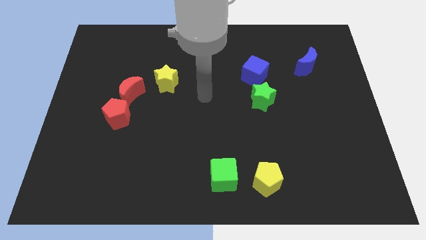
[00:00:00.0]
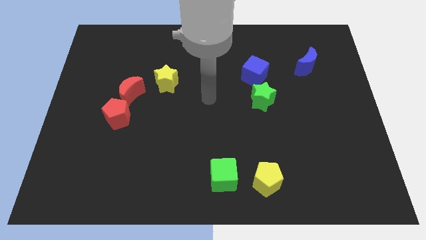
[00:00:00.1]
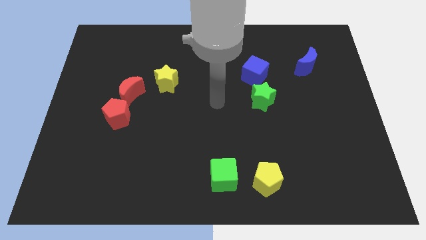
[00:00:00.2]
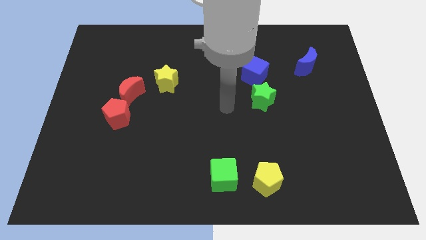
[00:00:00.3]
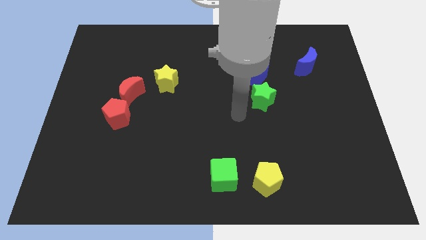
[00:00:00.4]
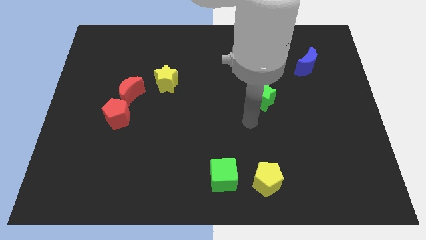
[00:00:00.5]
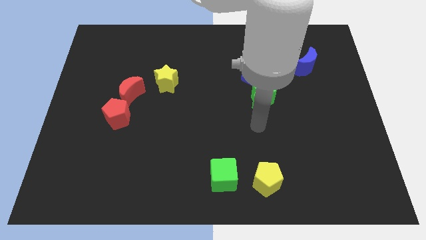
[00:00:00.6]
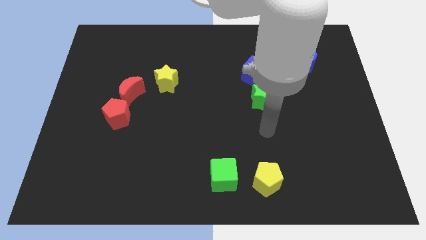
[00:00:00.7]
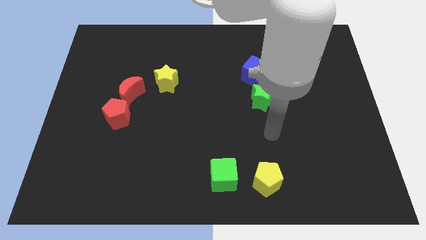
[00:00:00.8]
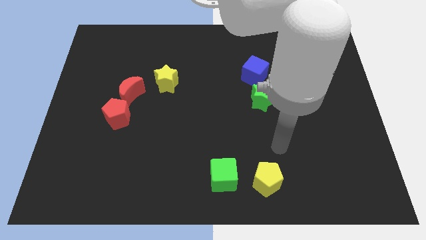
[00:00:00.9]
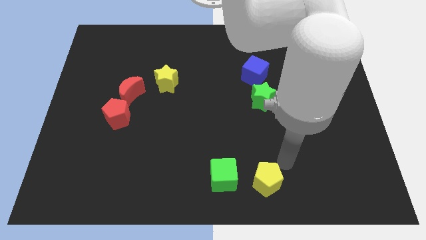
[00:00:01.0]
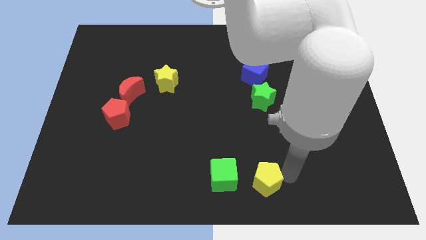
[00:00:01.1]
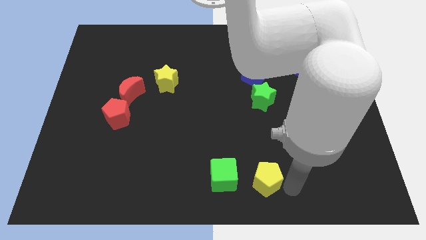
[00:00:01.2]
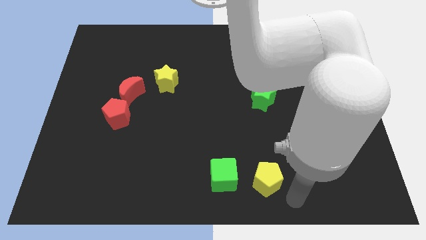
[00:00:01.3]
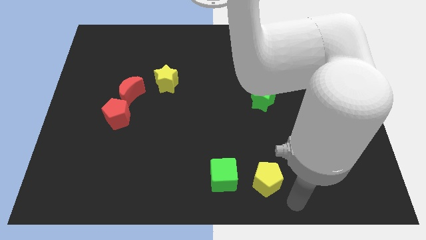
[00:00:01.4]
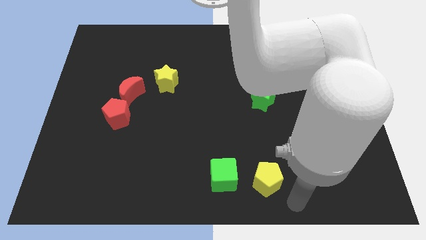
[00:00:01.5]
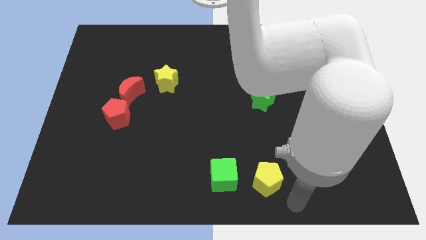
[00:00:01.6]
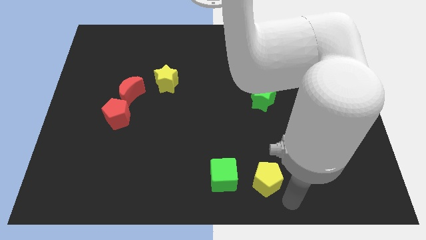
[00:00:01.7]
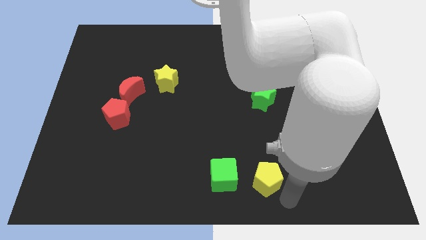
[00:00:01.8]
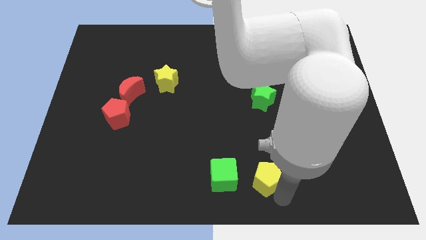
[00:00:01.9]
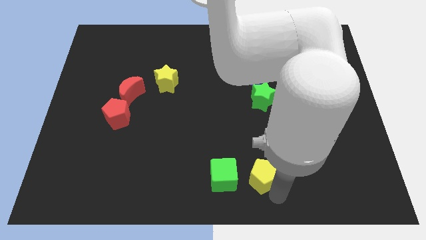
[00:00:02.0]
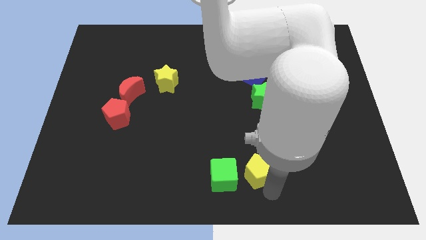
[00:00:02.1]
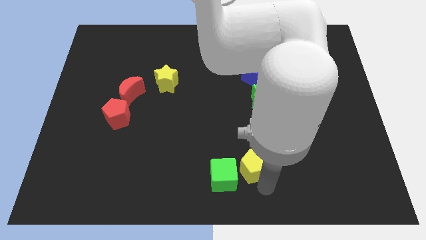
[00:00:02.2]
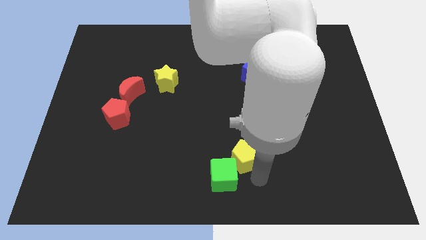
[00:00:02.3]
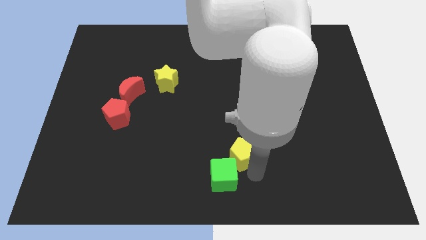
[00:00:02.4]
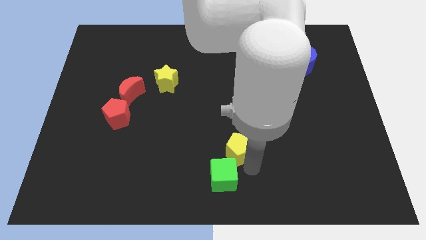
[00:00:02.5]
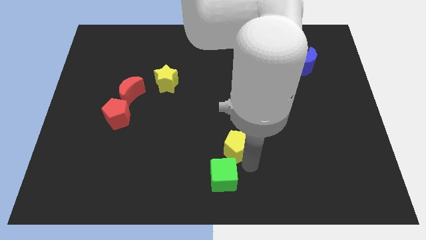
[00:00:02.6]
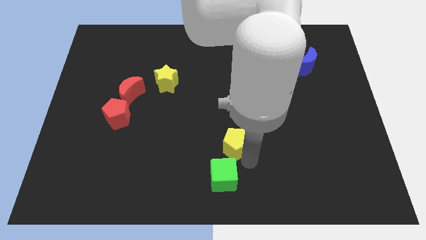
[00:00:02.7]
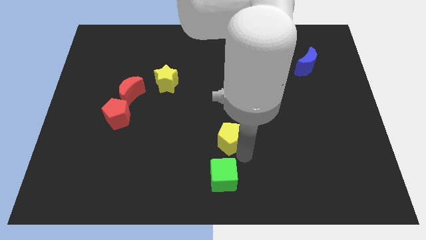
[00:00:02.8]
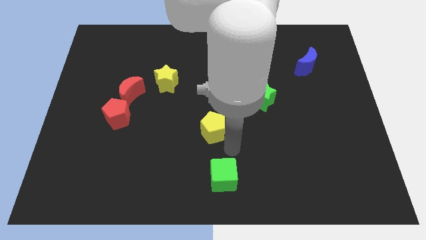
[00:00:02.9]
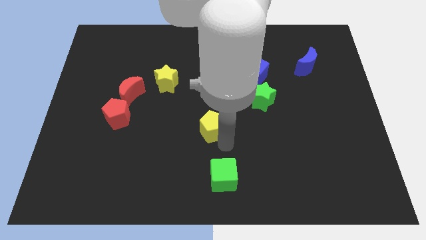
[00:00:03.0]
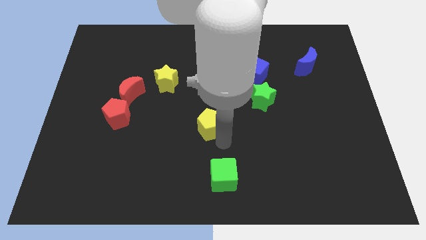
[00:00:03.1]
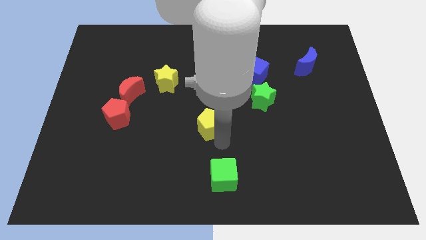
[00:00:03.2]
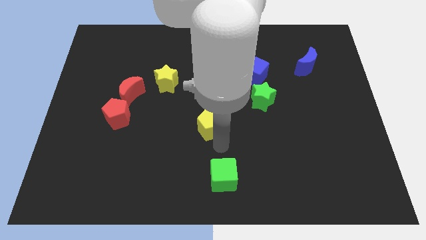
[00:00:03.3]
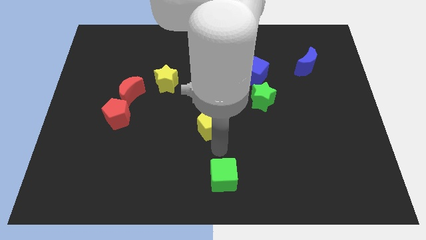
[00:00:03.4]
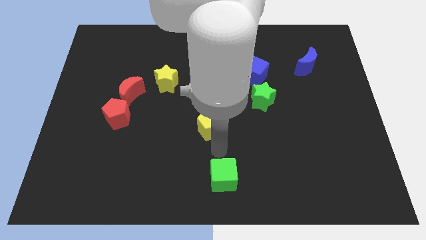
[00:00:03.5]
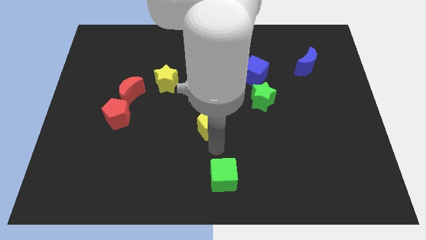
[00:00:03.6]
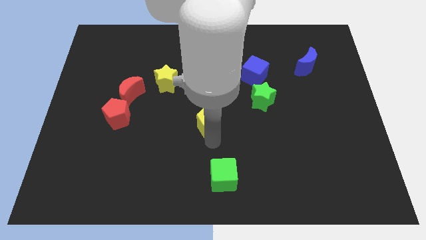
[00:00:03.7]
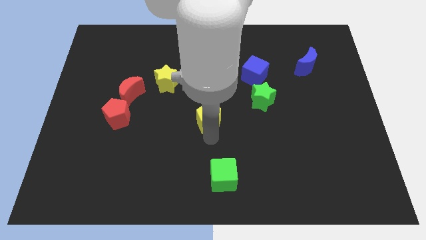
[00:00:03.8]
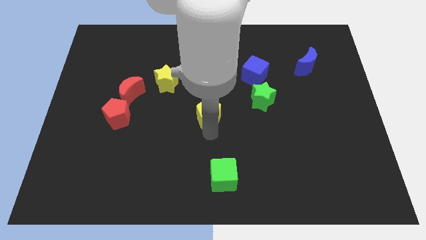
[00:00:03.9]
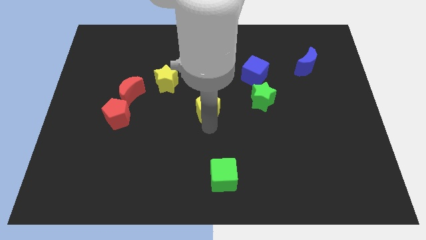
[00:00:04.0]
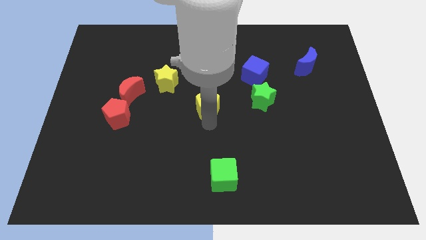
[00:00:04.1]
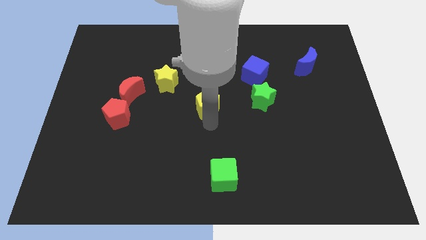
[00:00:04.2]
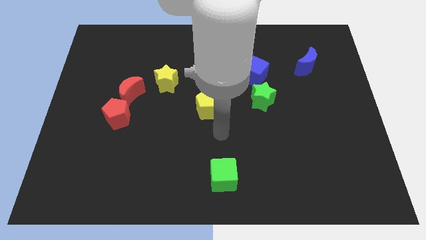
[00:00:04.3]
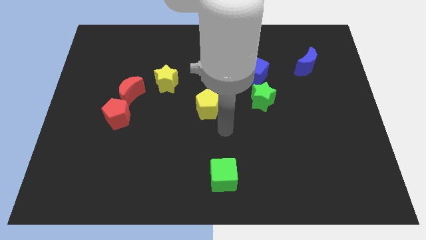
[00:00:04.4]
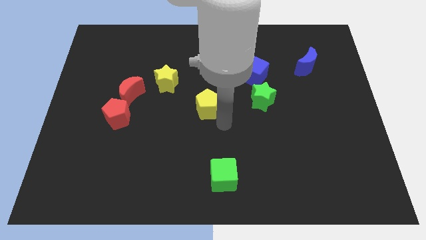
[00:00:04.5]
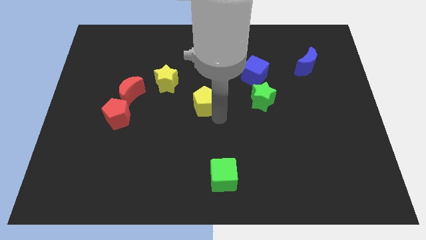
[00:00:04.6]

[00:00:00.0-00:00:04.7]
push the yellow pentagon to the center of the board

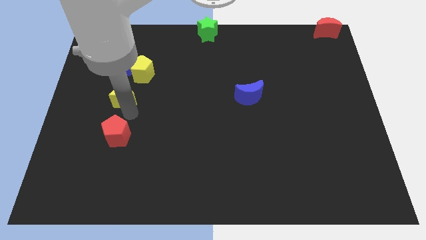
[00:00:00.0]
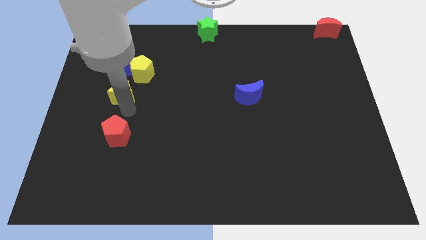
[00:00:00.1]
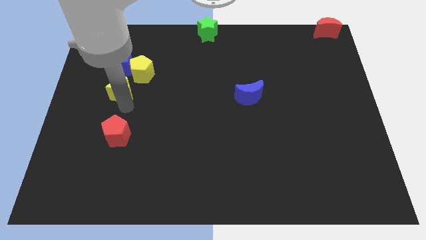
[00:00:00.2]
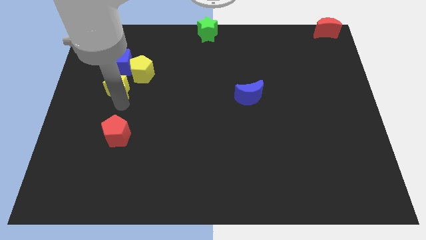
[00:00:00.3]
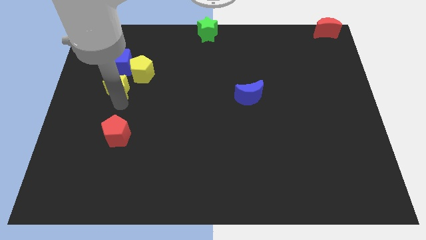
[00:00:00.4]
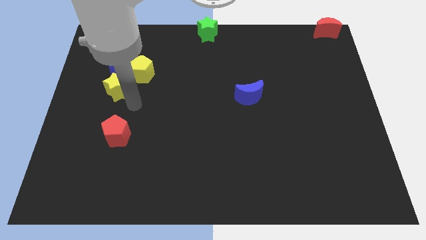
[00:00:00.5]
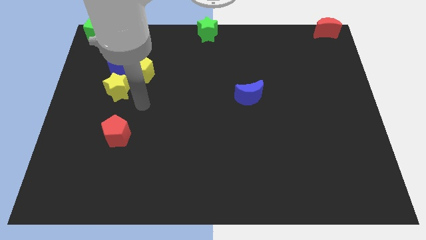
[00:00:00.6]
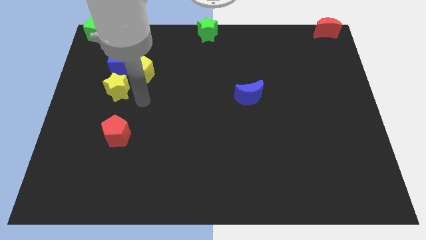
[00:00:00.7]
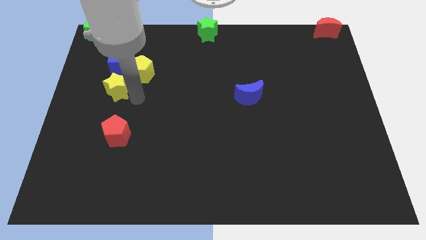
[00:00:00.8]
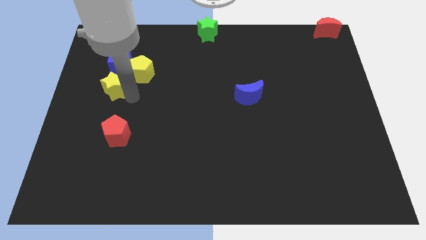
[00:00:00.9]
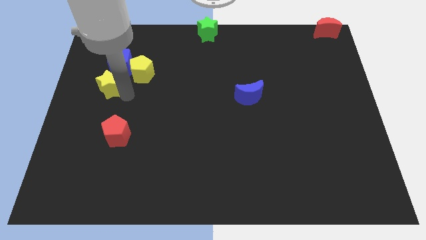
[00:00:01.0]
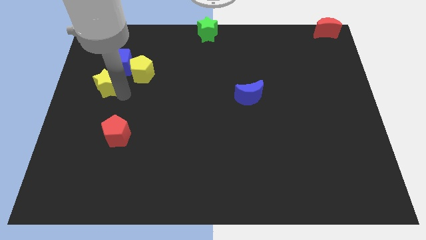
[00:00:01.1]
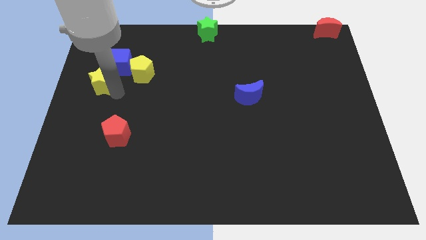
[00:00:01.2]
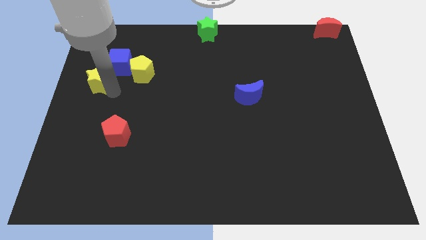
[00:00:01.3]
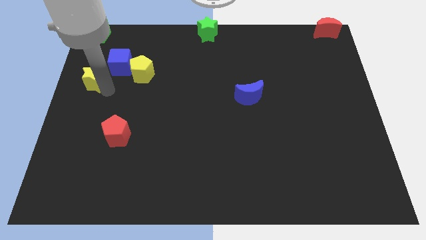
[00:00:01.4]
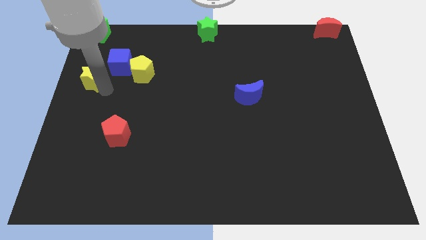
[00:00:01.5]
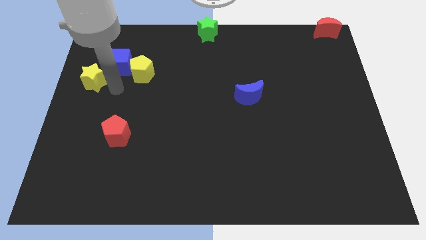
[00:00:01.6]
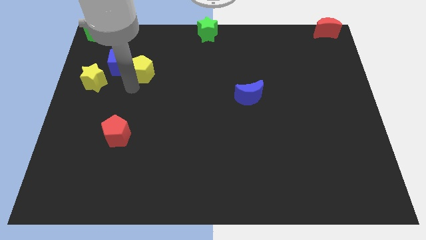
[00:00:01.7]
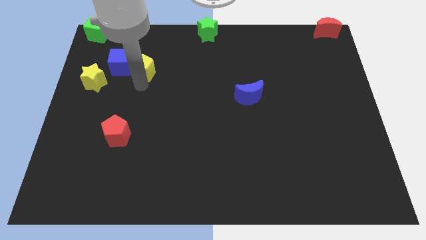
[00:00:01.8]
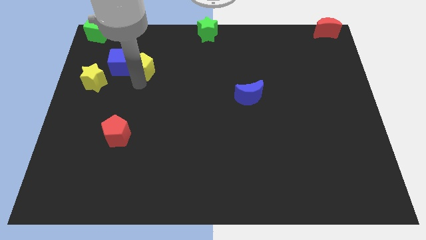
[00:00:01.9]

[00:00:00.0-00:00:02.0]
move the yellow star to the center left

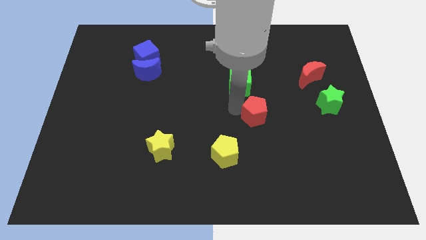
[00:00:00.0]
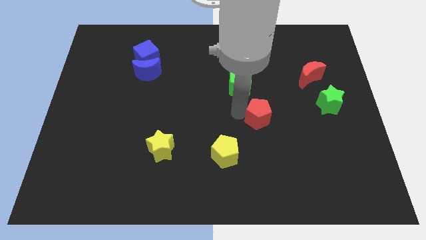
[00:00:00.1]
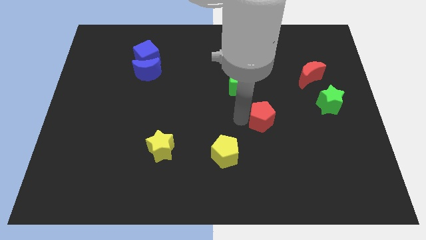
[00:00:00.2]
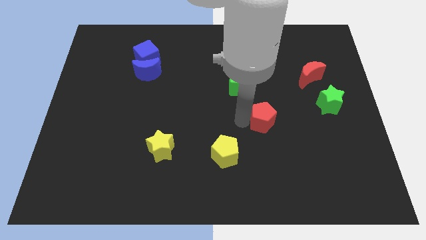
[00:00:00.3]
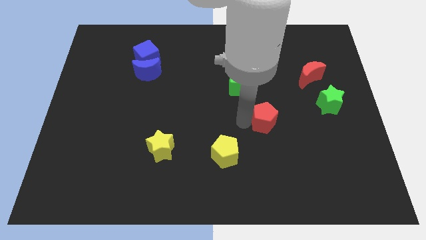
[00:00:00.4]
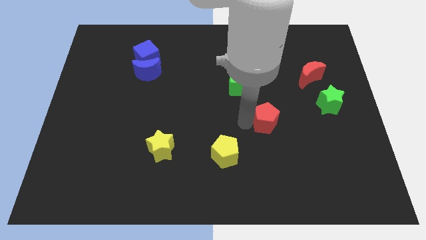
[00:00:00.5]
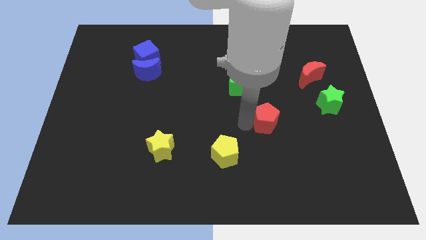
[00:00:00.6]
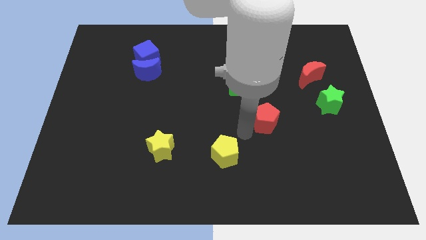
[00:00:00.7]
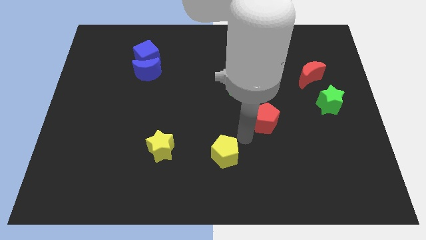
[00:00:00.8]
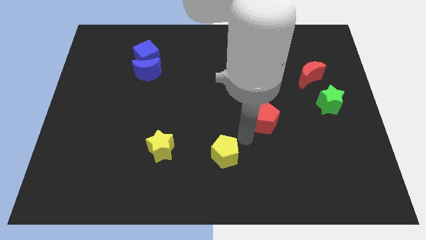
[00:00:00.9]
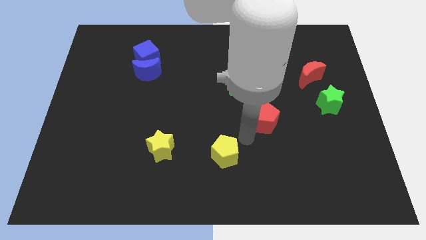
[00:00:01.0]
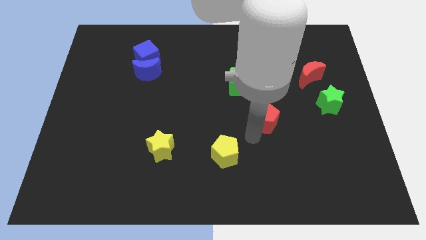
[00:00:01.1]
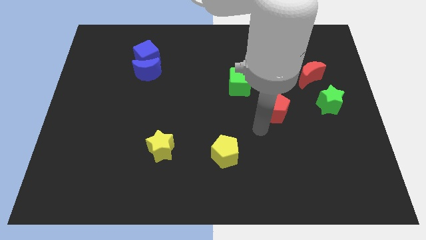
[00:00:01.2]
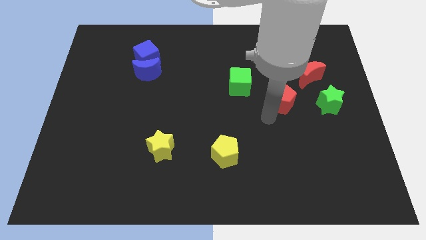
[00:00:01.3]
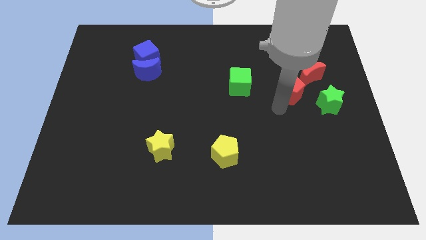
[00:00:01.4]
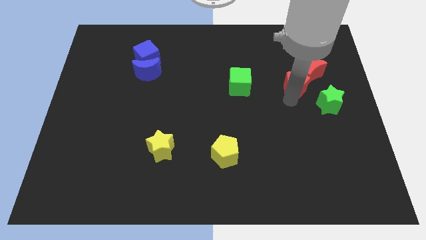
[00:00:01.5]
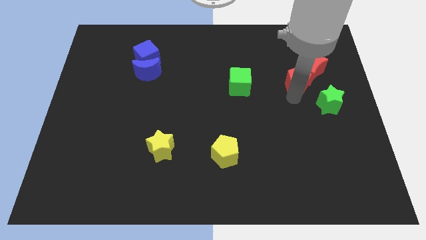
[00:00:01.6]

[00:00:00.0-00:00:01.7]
push the red pentagon into the red moon

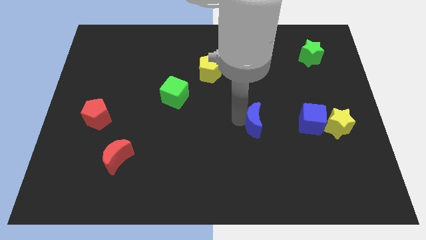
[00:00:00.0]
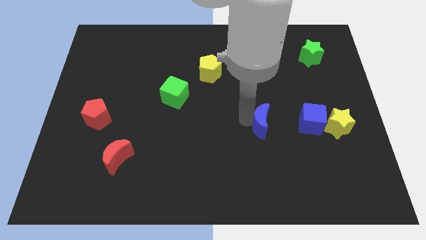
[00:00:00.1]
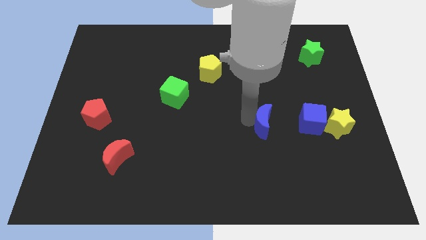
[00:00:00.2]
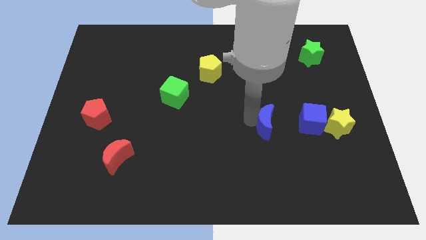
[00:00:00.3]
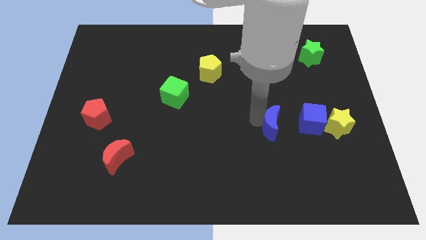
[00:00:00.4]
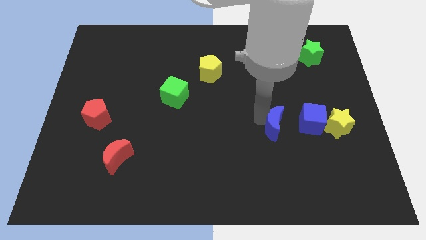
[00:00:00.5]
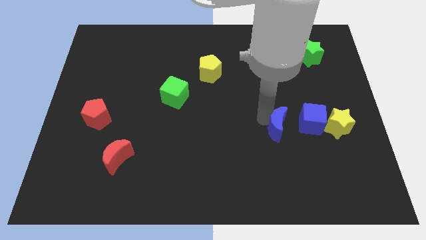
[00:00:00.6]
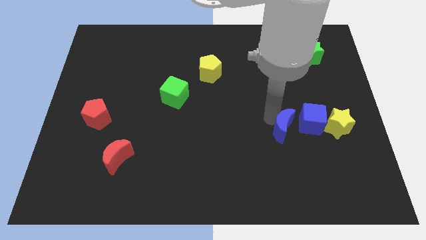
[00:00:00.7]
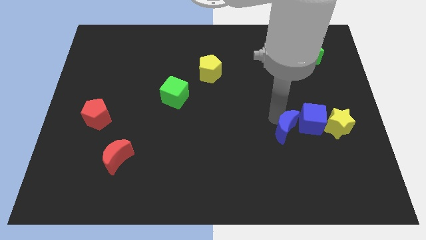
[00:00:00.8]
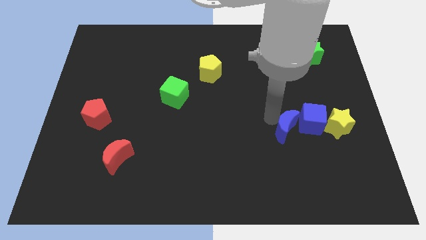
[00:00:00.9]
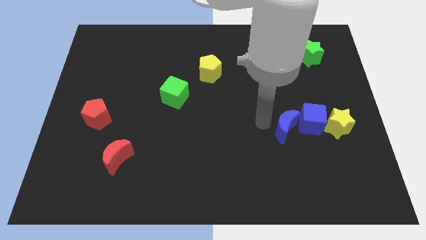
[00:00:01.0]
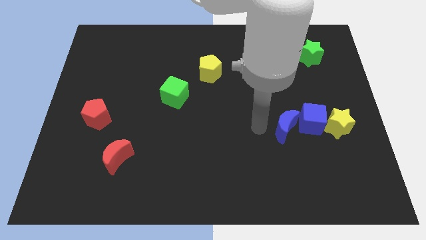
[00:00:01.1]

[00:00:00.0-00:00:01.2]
move the blue crescent to the left of the blue cube
